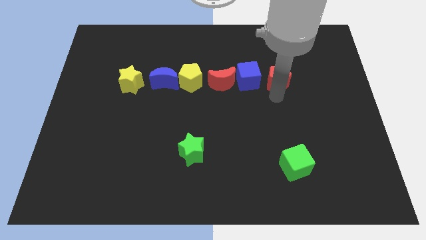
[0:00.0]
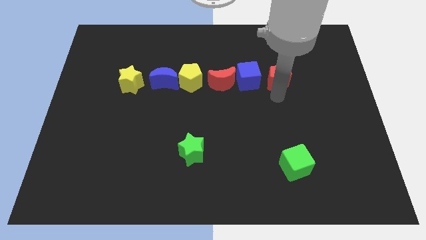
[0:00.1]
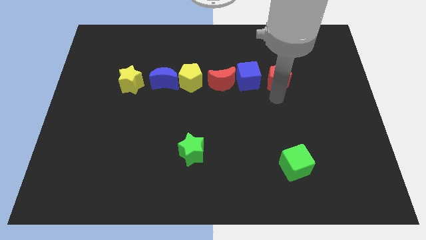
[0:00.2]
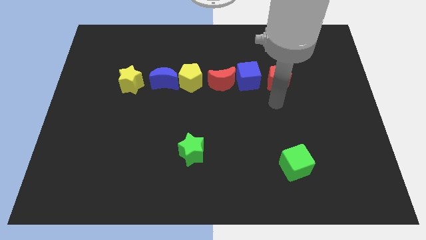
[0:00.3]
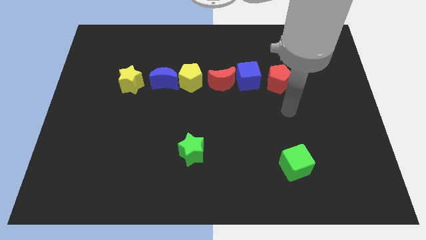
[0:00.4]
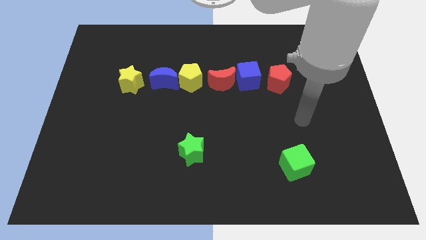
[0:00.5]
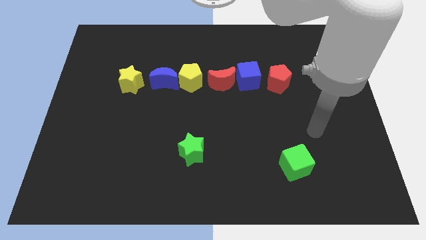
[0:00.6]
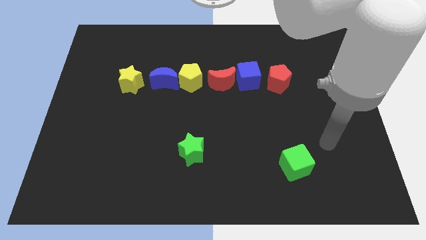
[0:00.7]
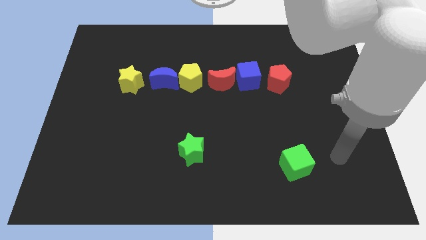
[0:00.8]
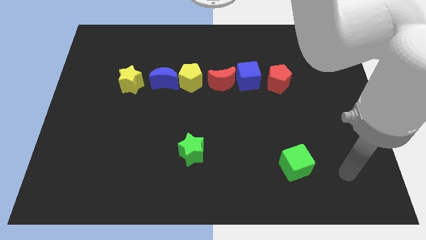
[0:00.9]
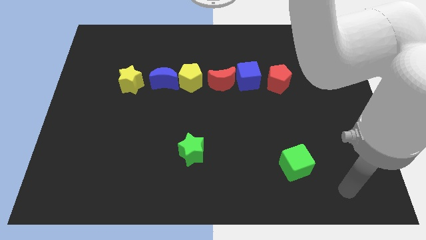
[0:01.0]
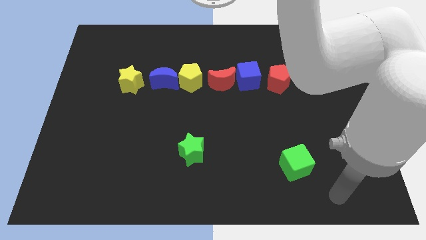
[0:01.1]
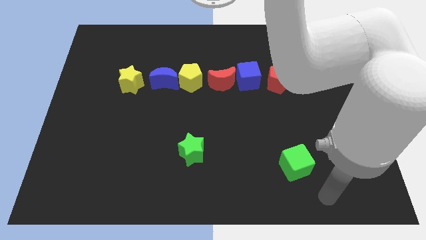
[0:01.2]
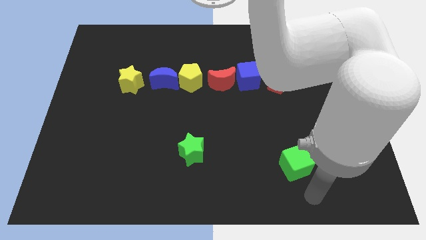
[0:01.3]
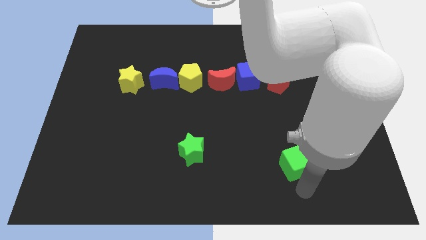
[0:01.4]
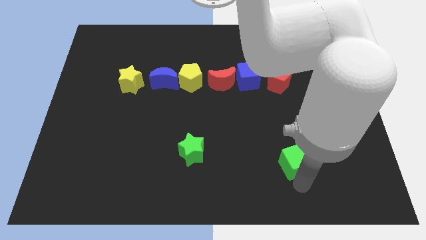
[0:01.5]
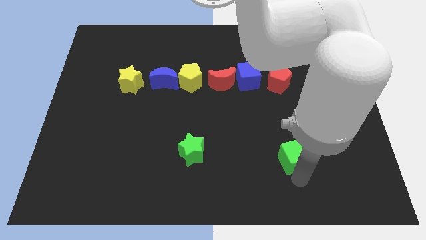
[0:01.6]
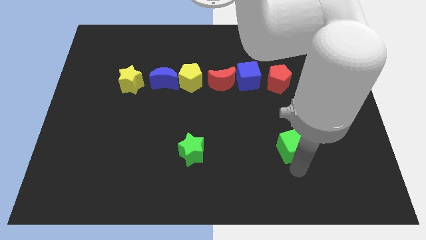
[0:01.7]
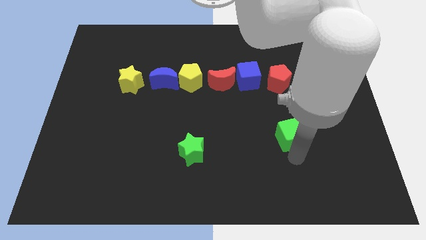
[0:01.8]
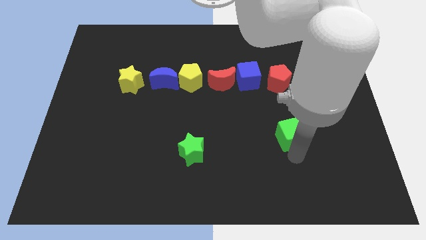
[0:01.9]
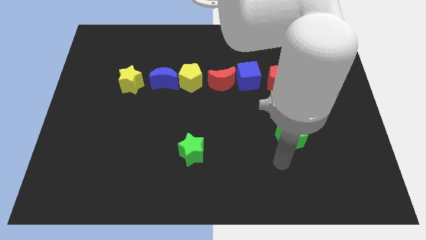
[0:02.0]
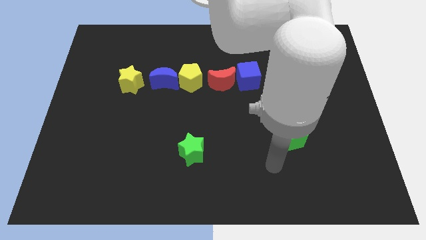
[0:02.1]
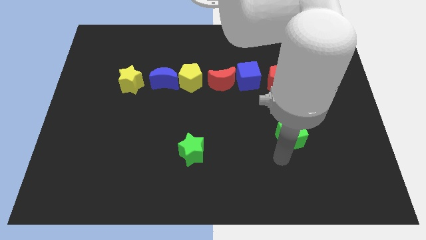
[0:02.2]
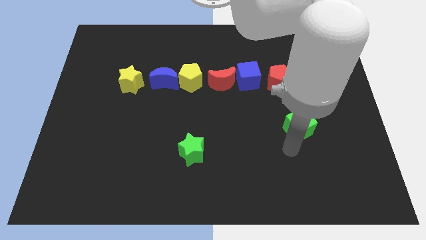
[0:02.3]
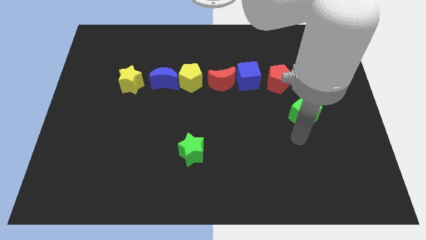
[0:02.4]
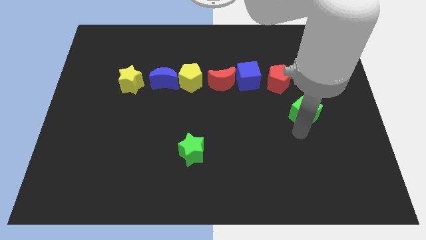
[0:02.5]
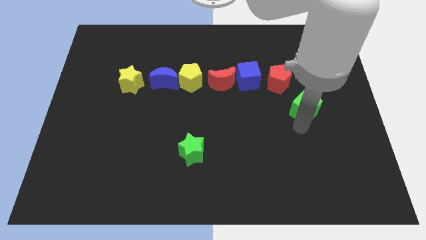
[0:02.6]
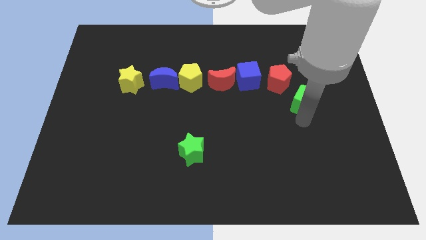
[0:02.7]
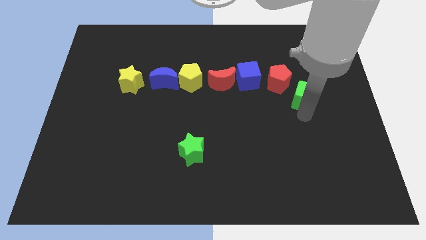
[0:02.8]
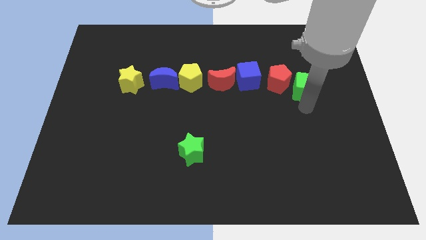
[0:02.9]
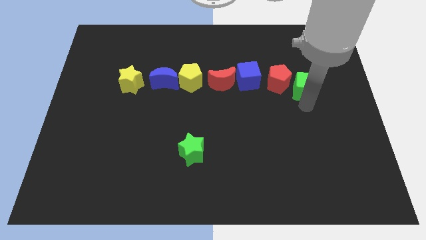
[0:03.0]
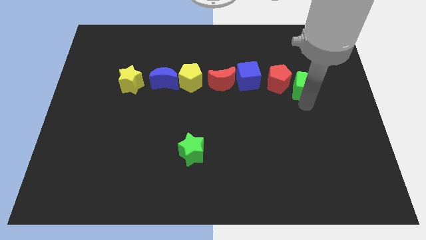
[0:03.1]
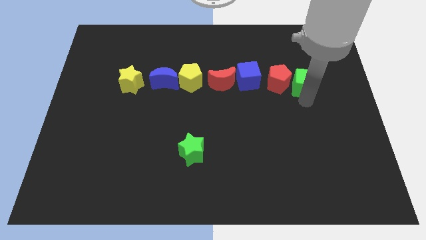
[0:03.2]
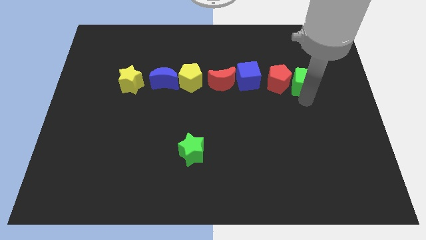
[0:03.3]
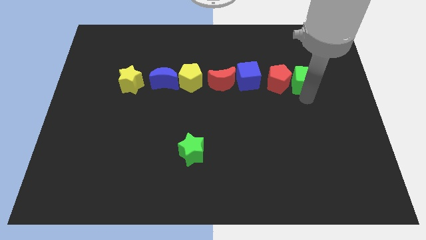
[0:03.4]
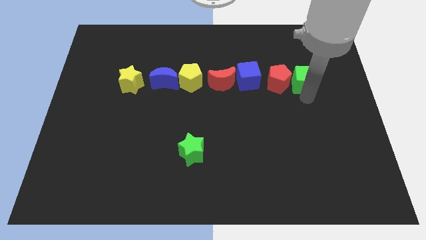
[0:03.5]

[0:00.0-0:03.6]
place the green cube beside the red pentagon

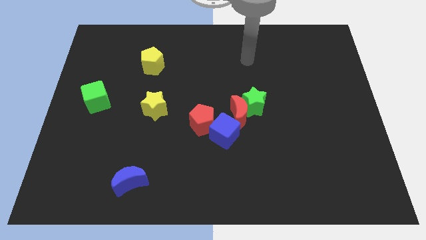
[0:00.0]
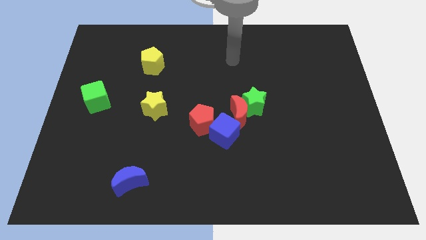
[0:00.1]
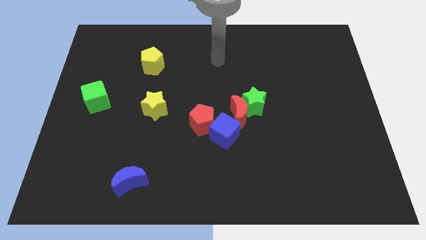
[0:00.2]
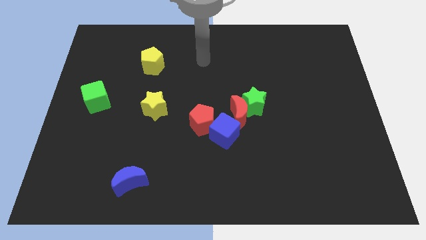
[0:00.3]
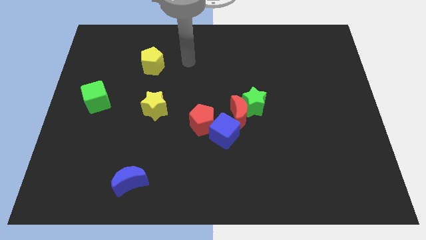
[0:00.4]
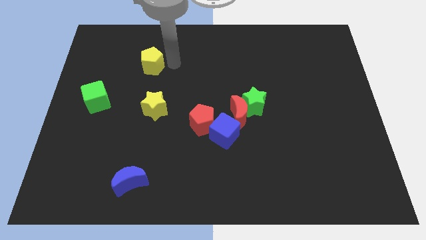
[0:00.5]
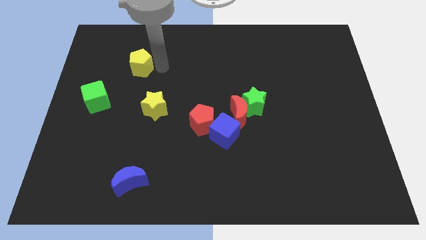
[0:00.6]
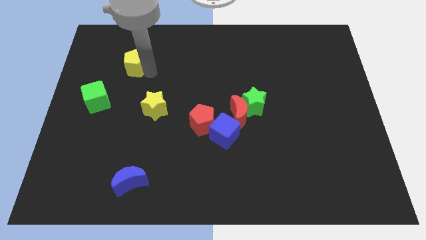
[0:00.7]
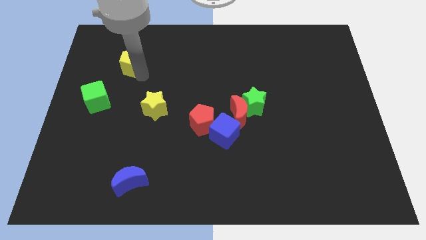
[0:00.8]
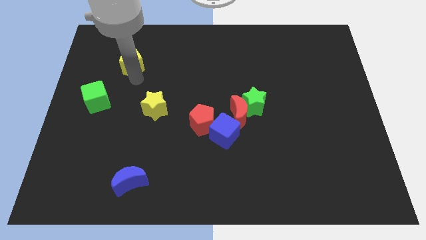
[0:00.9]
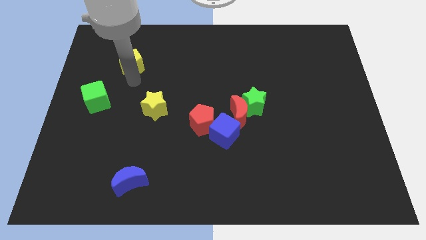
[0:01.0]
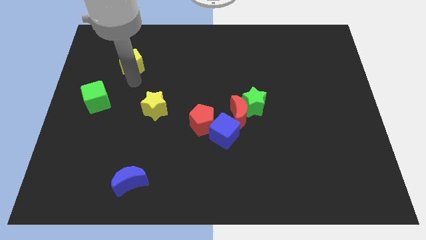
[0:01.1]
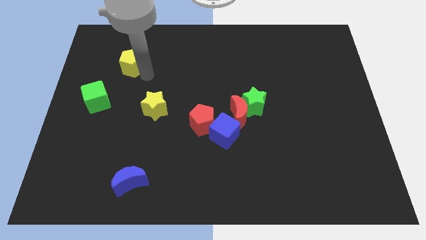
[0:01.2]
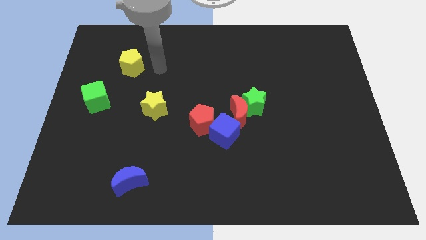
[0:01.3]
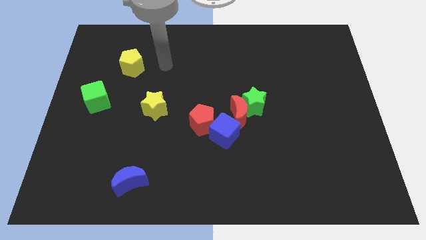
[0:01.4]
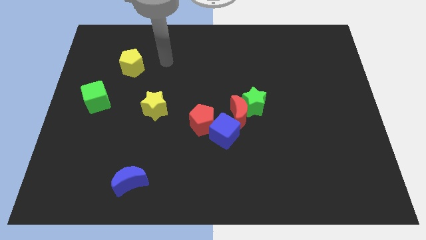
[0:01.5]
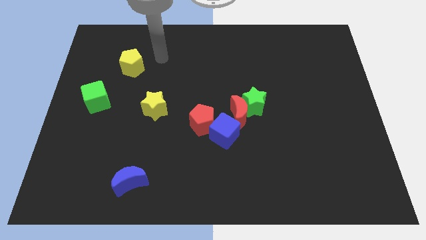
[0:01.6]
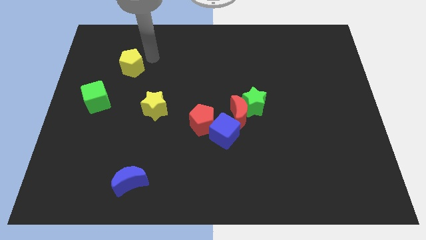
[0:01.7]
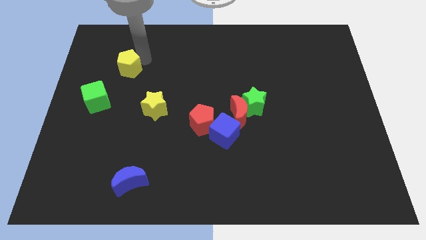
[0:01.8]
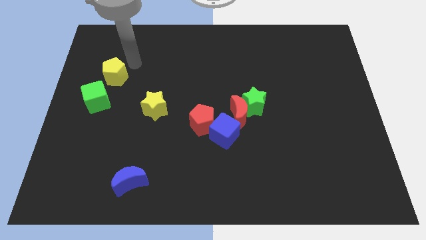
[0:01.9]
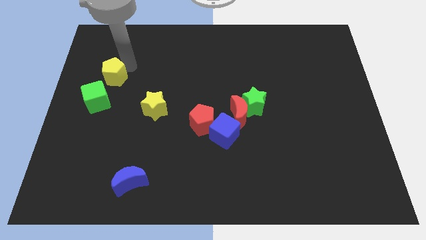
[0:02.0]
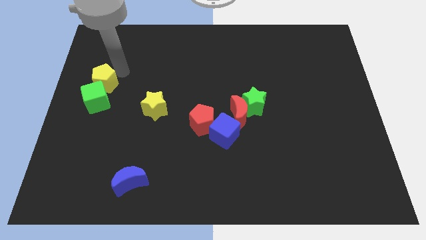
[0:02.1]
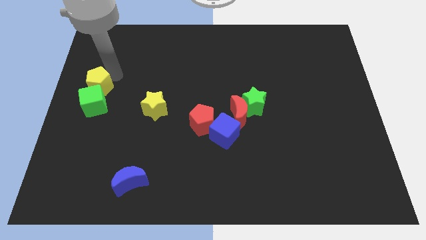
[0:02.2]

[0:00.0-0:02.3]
push the yellow pentagon into the green cube

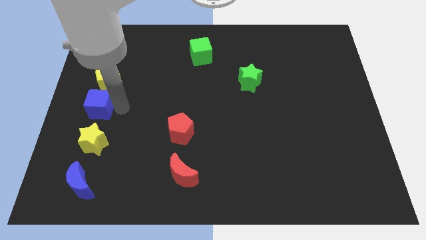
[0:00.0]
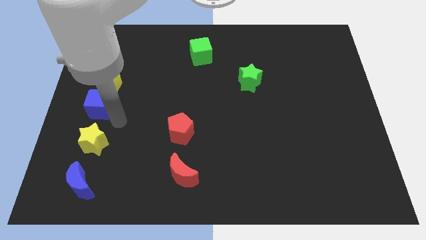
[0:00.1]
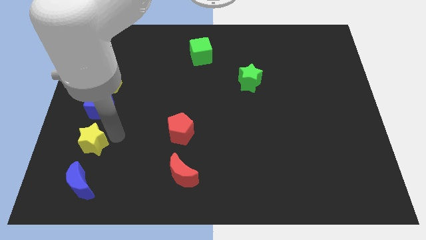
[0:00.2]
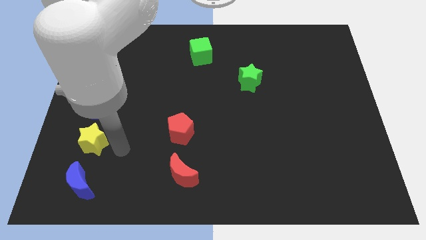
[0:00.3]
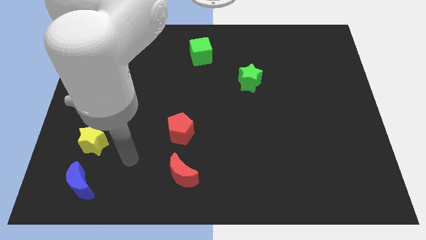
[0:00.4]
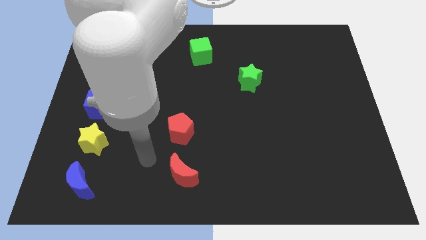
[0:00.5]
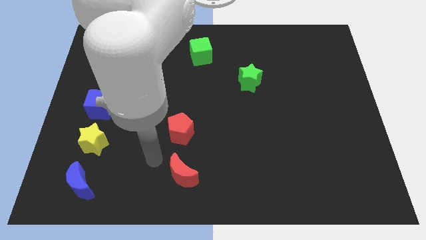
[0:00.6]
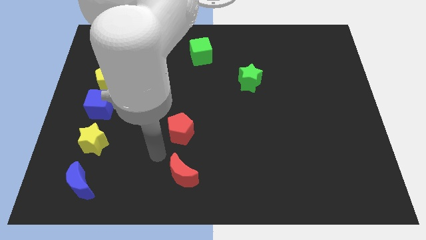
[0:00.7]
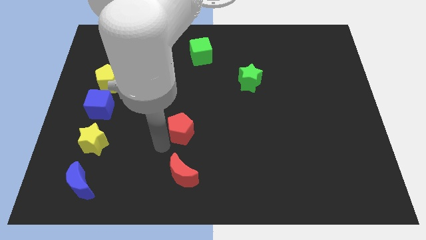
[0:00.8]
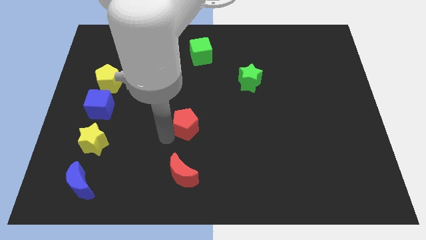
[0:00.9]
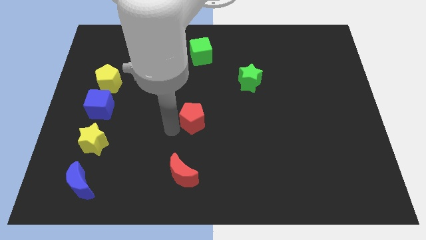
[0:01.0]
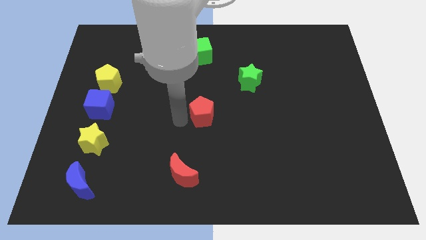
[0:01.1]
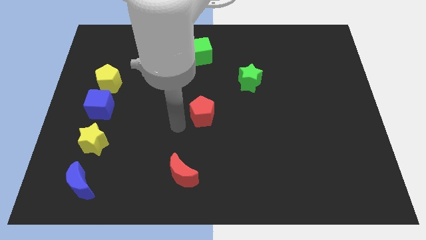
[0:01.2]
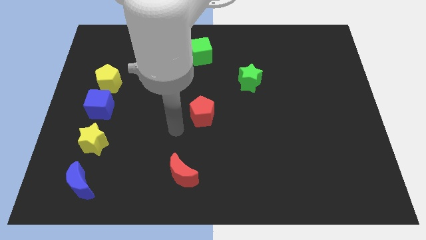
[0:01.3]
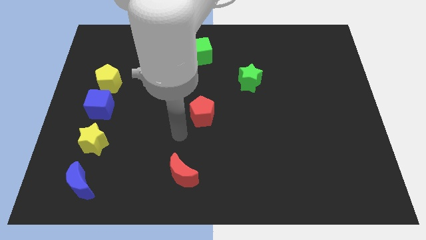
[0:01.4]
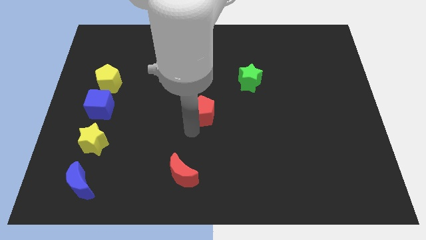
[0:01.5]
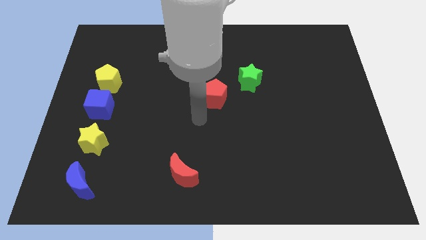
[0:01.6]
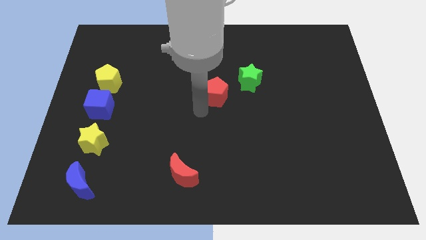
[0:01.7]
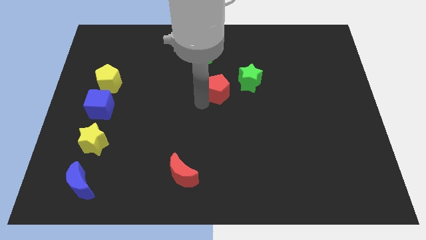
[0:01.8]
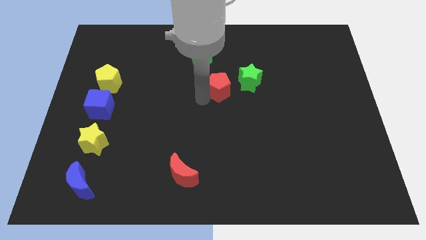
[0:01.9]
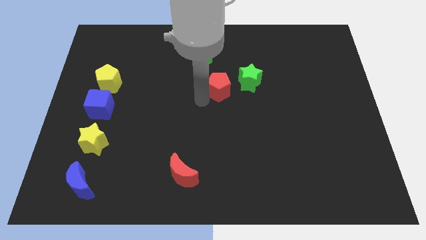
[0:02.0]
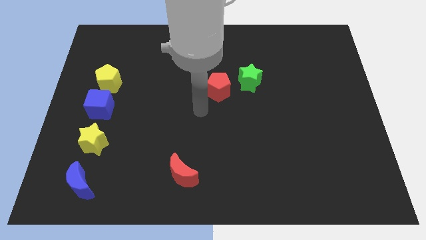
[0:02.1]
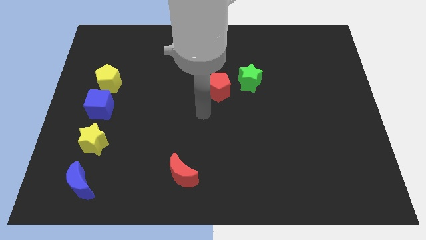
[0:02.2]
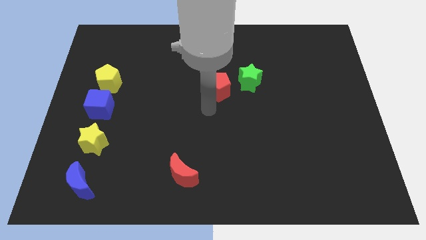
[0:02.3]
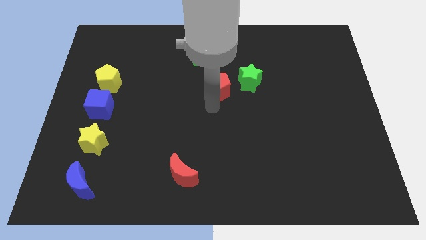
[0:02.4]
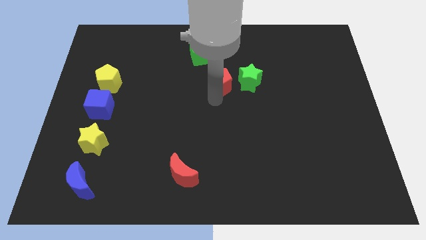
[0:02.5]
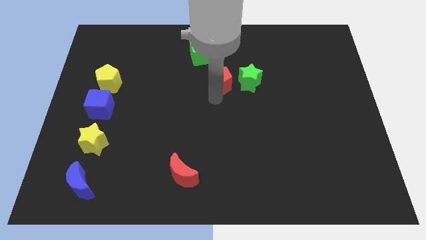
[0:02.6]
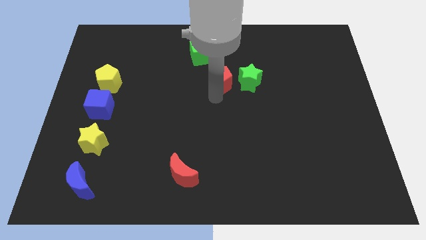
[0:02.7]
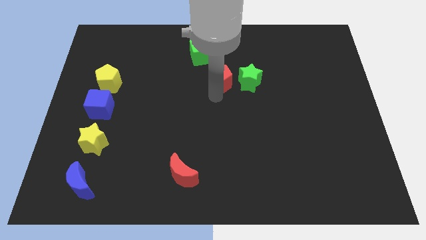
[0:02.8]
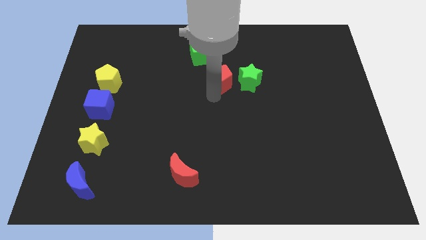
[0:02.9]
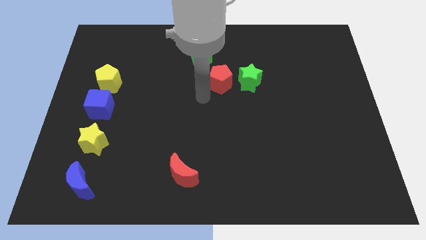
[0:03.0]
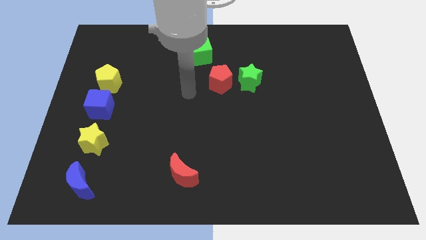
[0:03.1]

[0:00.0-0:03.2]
slide the red pentagon to the left side of the green star
